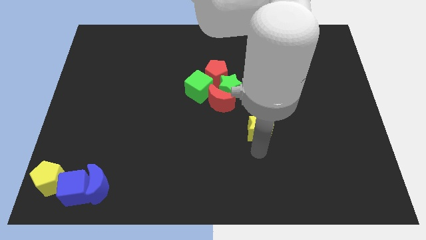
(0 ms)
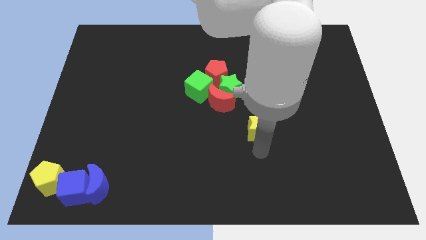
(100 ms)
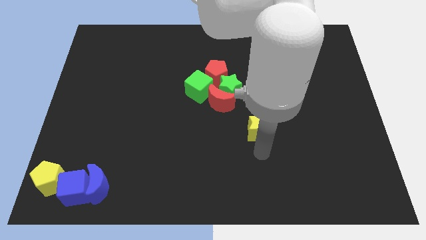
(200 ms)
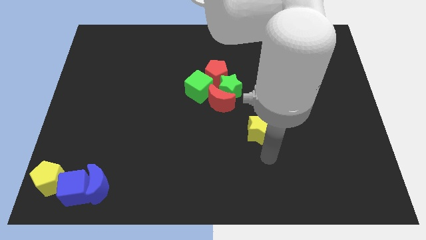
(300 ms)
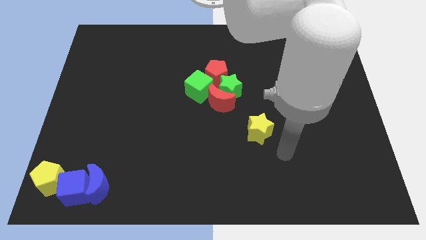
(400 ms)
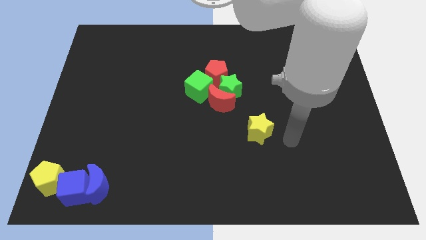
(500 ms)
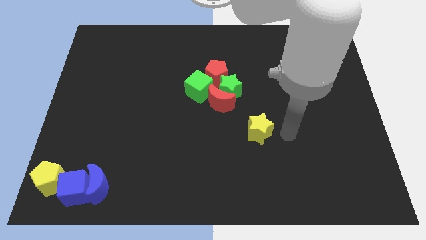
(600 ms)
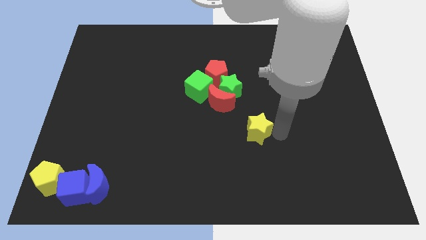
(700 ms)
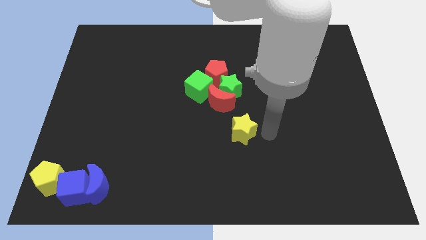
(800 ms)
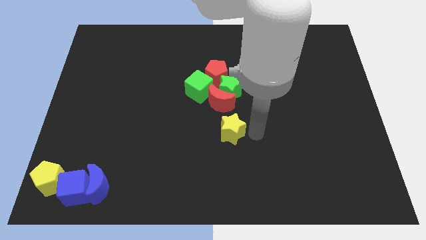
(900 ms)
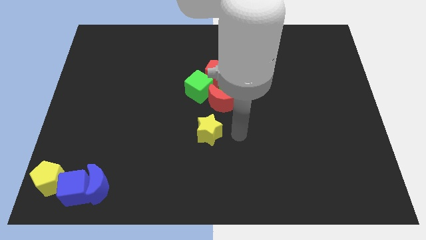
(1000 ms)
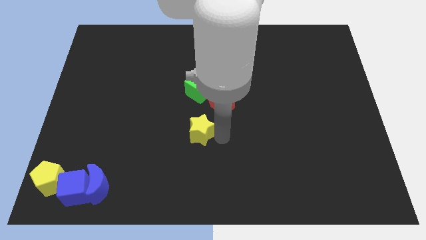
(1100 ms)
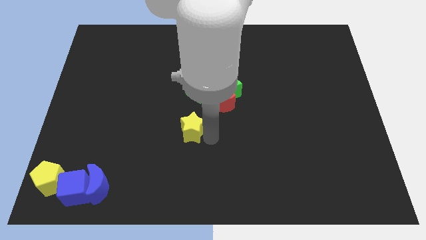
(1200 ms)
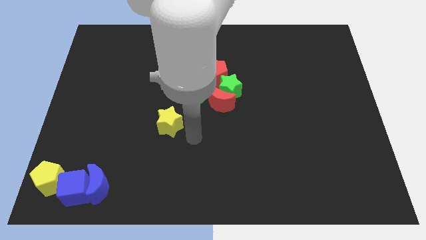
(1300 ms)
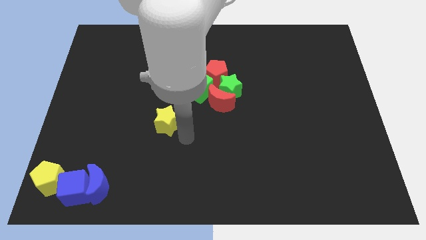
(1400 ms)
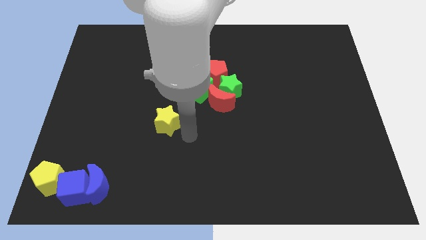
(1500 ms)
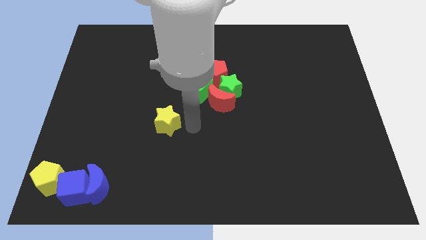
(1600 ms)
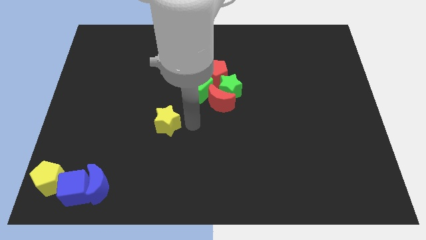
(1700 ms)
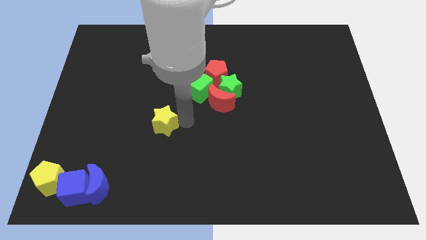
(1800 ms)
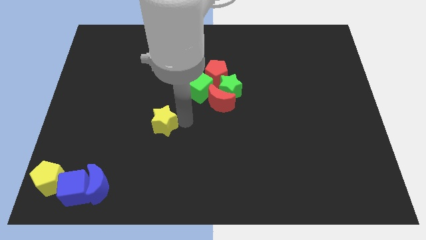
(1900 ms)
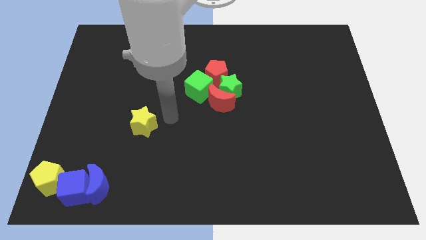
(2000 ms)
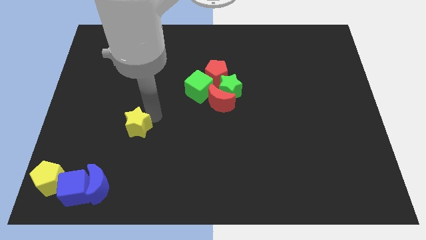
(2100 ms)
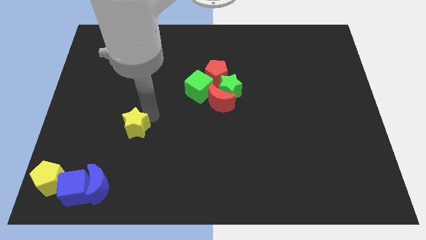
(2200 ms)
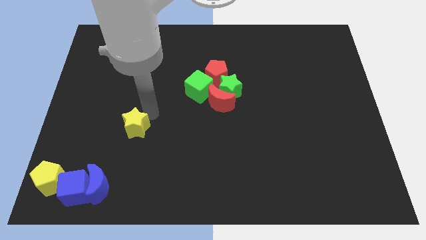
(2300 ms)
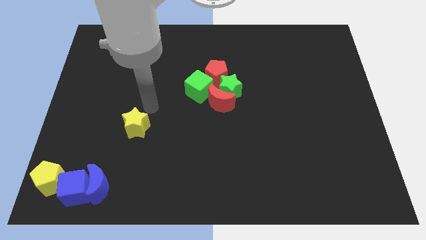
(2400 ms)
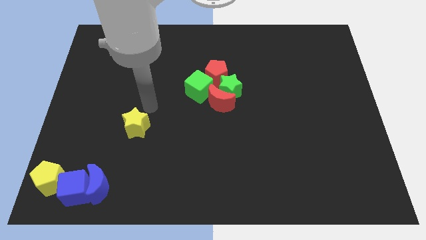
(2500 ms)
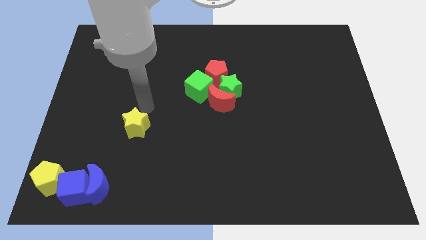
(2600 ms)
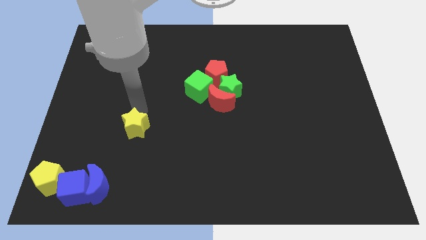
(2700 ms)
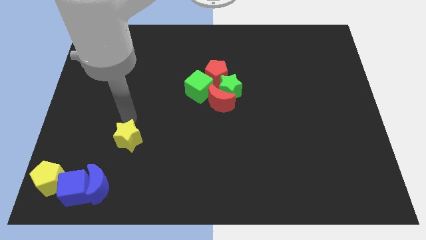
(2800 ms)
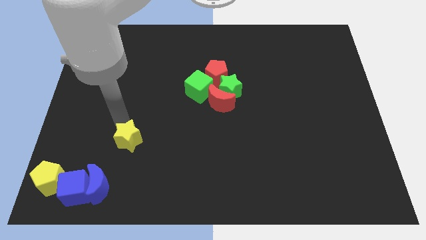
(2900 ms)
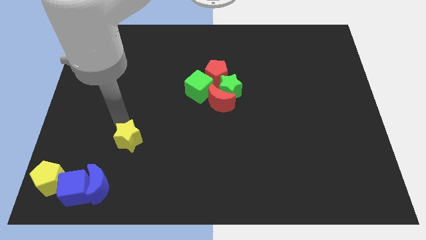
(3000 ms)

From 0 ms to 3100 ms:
push the yellow star to the bottom left of the green cube

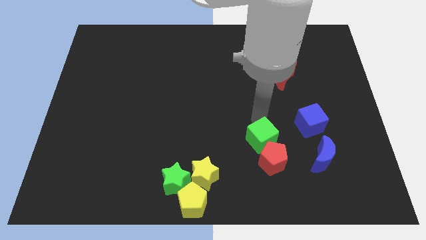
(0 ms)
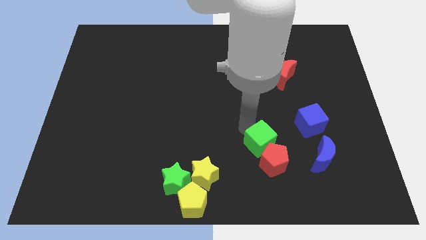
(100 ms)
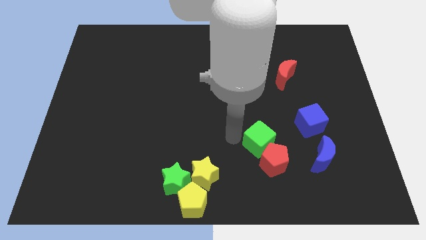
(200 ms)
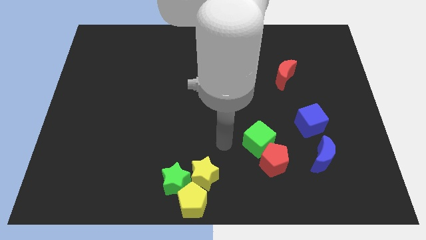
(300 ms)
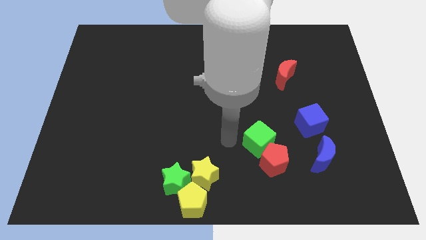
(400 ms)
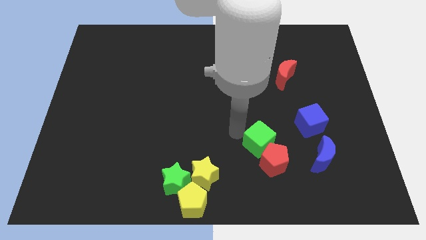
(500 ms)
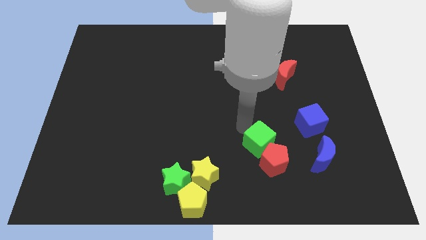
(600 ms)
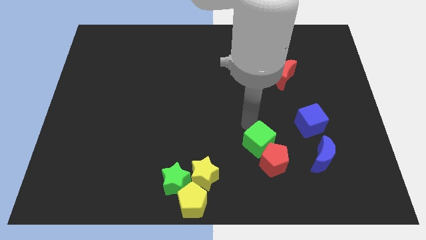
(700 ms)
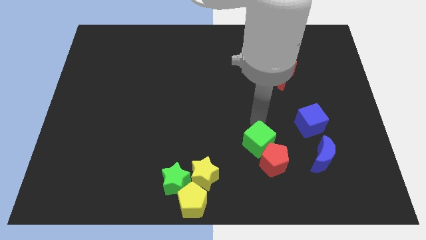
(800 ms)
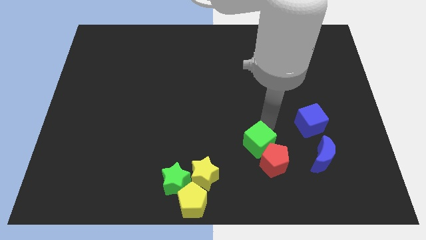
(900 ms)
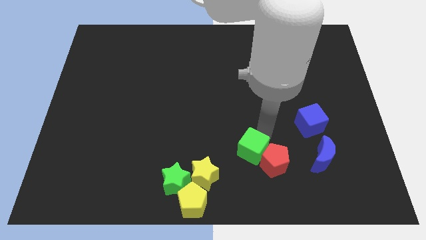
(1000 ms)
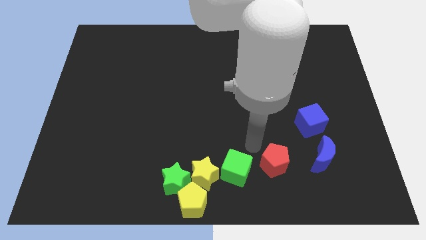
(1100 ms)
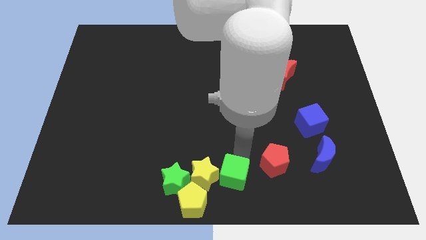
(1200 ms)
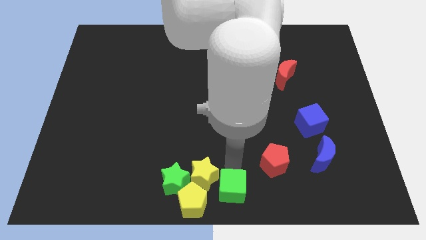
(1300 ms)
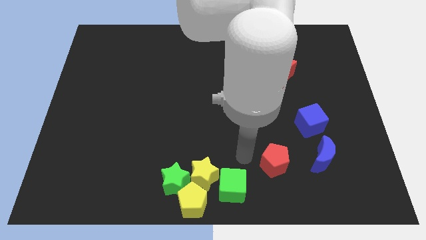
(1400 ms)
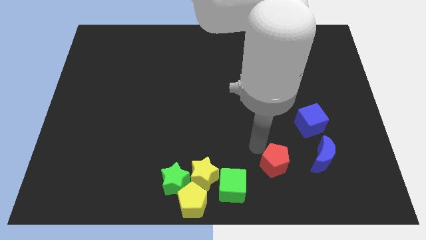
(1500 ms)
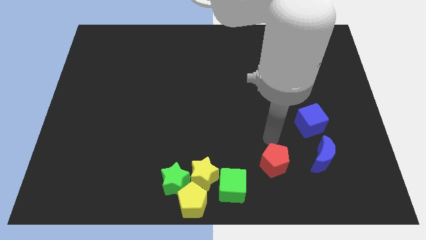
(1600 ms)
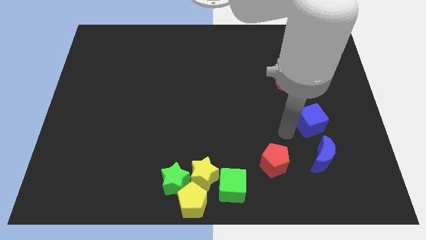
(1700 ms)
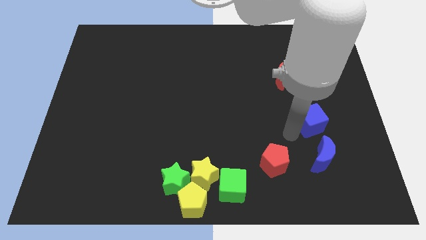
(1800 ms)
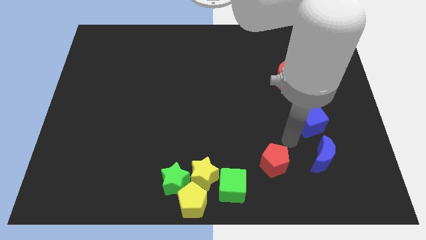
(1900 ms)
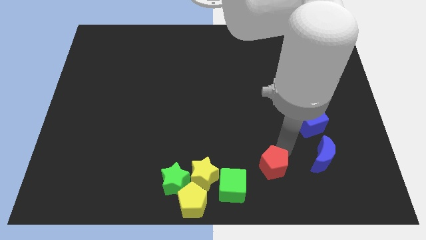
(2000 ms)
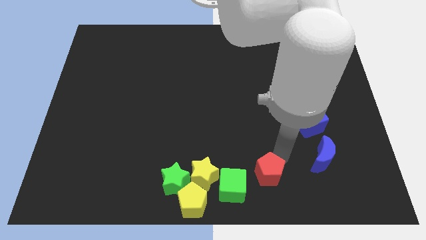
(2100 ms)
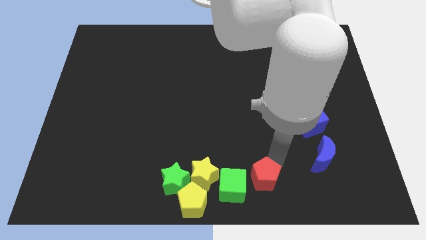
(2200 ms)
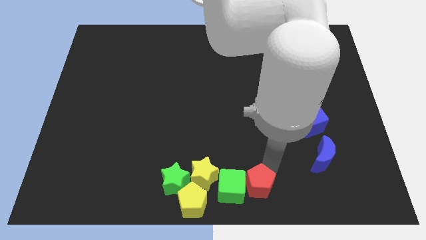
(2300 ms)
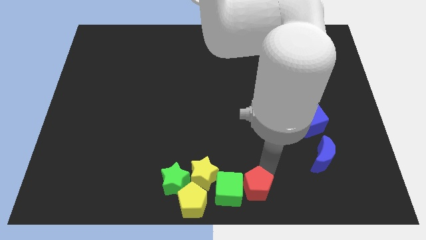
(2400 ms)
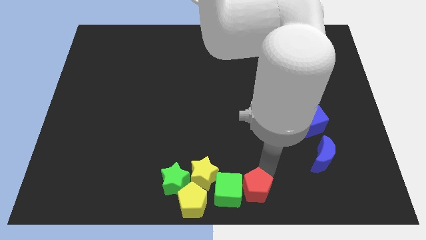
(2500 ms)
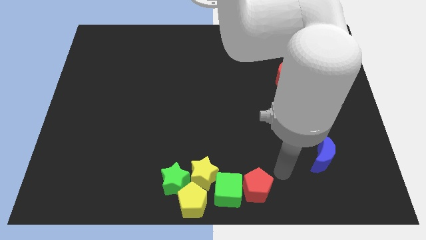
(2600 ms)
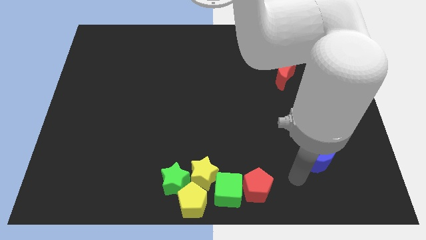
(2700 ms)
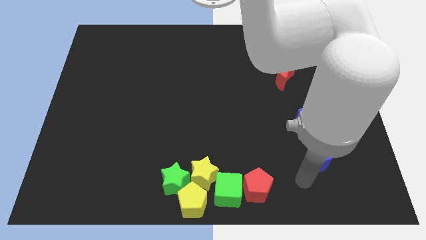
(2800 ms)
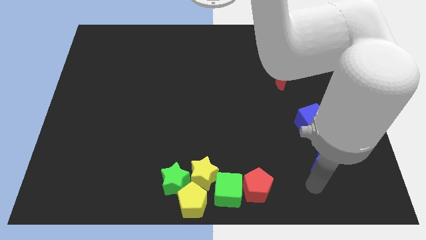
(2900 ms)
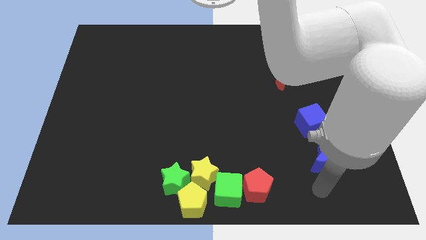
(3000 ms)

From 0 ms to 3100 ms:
push the green cube along with the red pentagon at the right of the group of yellow blocks

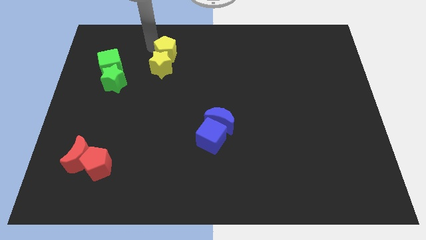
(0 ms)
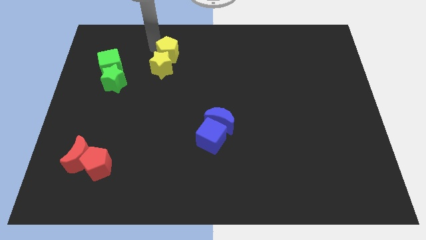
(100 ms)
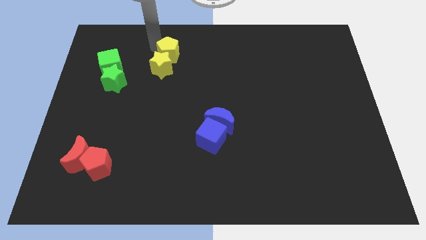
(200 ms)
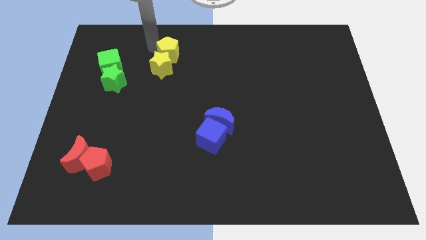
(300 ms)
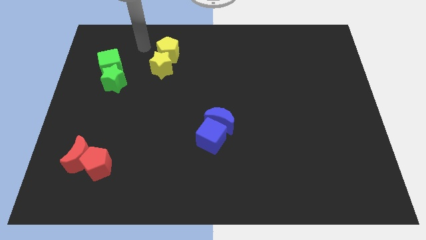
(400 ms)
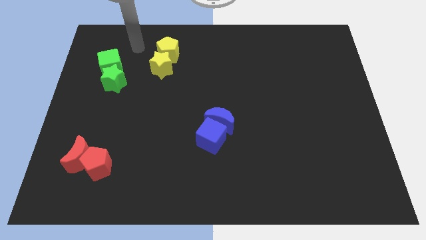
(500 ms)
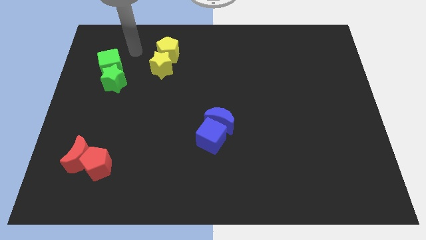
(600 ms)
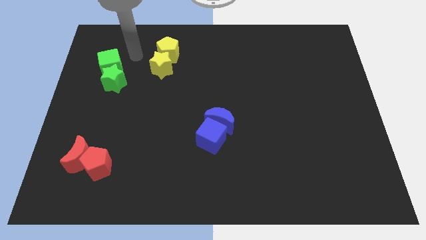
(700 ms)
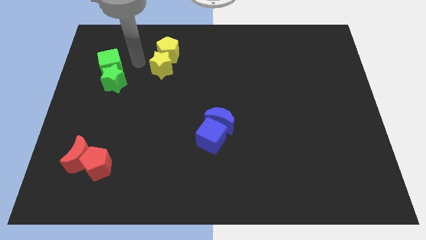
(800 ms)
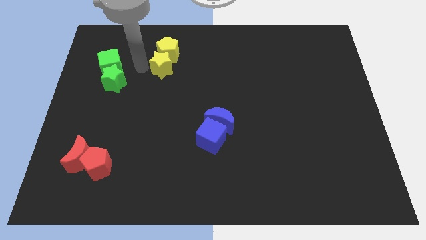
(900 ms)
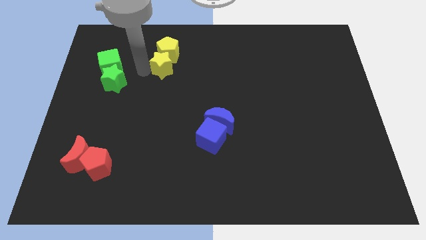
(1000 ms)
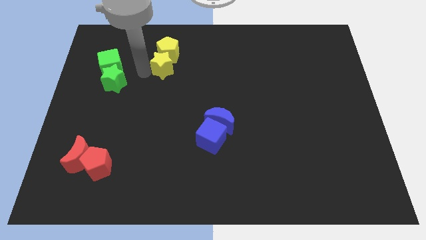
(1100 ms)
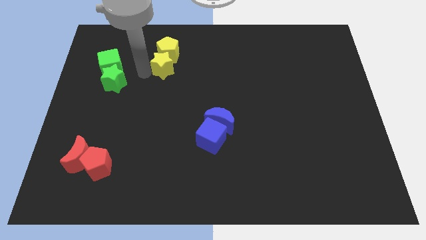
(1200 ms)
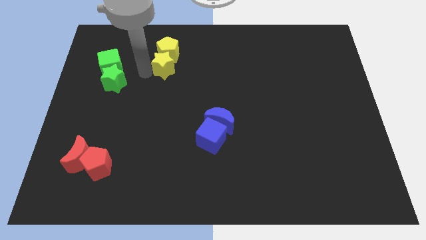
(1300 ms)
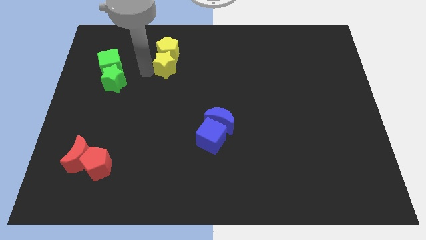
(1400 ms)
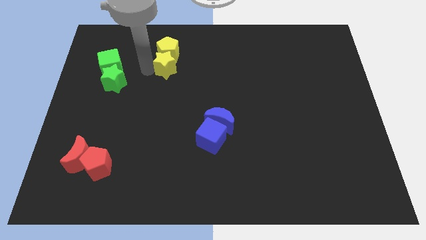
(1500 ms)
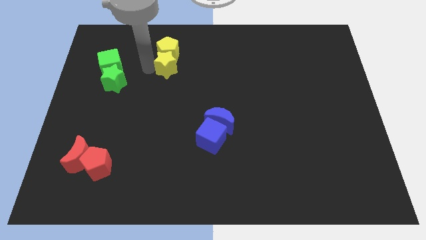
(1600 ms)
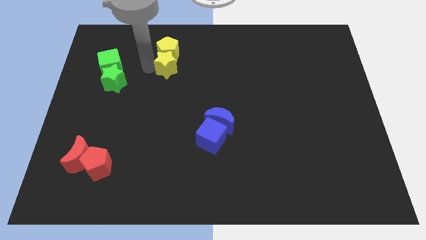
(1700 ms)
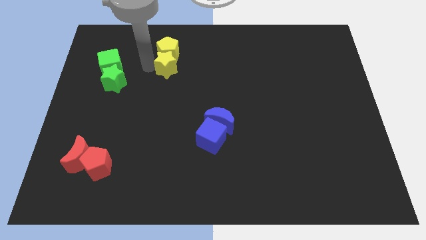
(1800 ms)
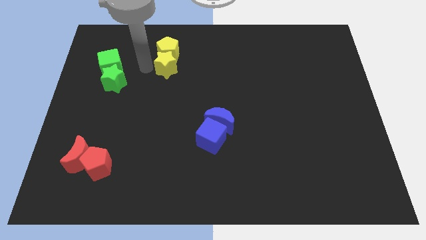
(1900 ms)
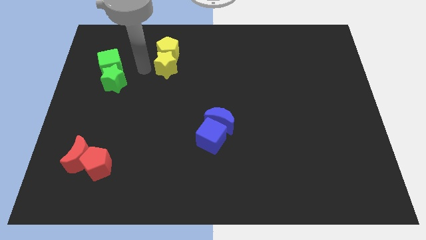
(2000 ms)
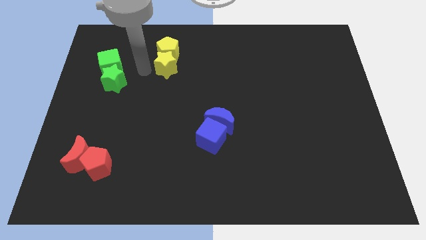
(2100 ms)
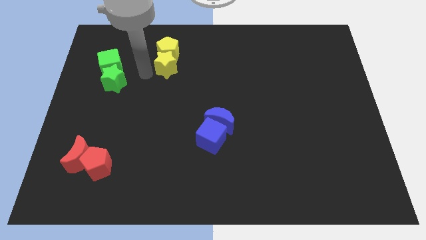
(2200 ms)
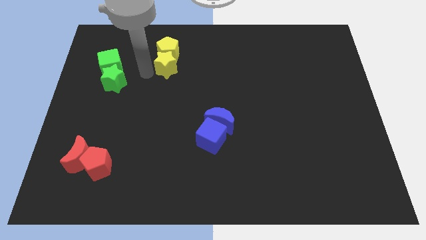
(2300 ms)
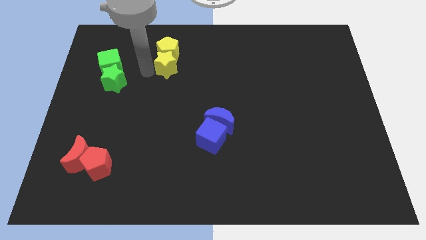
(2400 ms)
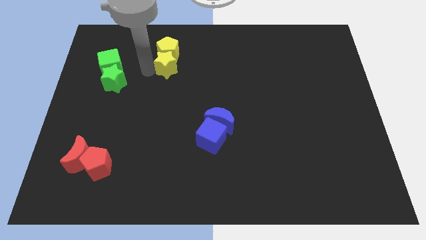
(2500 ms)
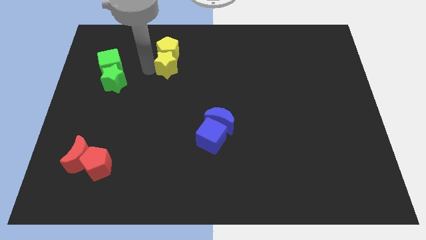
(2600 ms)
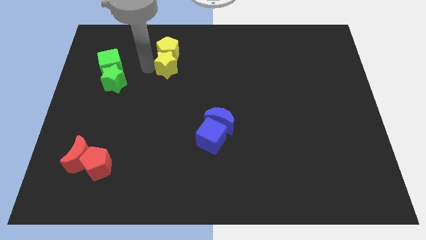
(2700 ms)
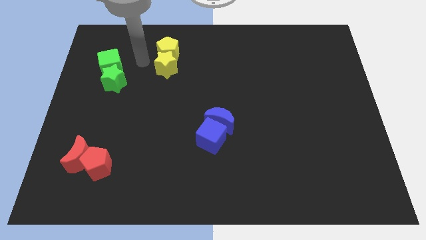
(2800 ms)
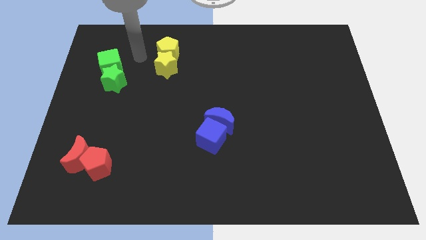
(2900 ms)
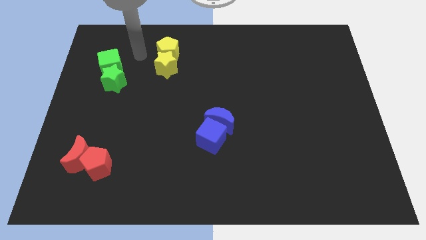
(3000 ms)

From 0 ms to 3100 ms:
move your arm towards the green cube
